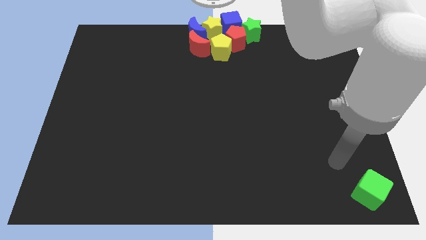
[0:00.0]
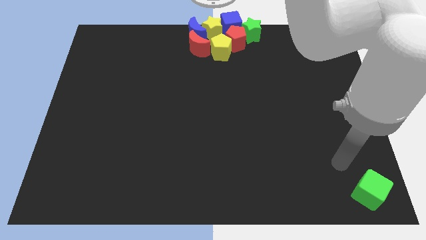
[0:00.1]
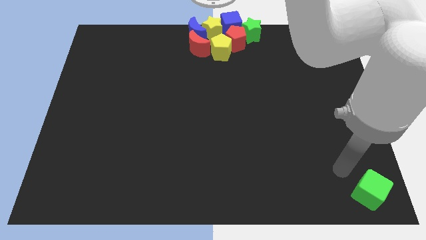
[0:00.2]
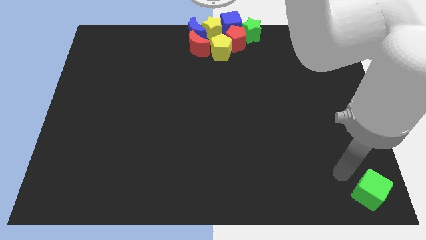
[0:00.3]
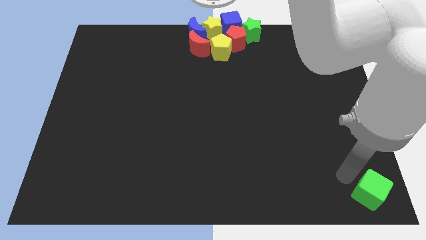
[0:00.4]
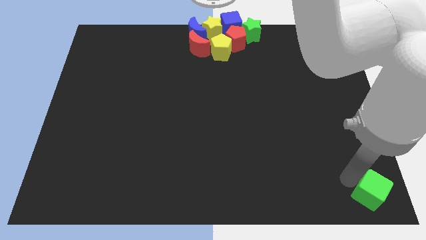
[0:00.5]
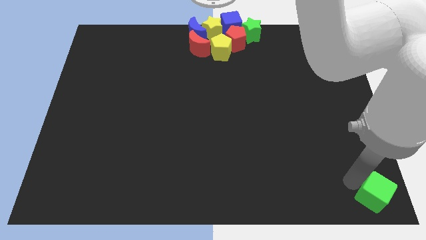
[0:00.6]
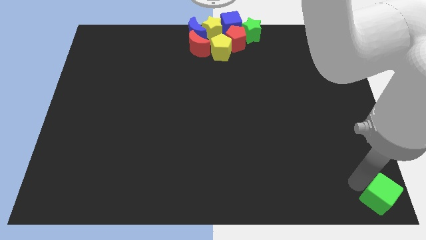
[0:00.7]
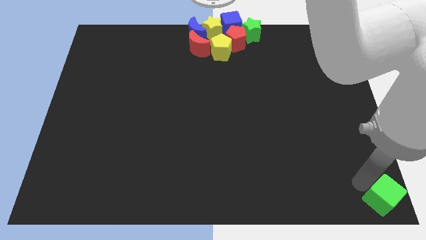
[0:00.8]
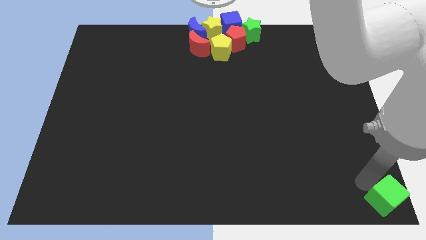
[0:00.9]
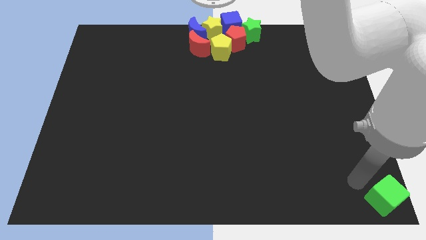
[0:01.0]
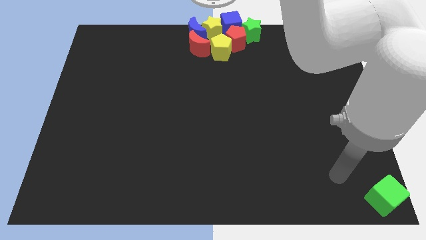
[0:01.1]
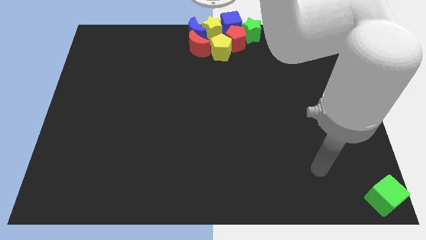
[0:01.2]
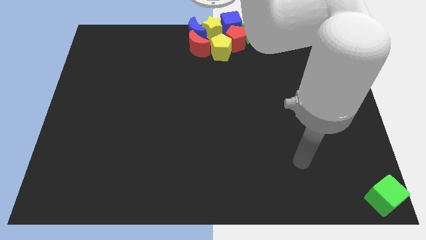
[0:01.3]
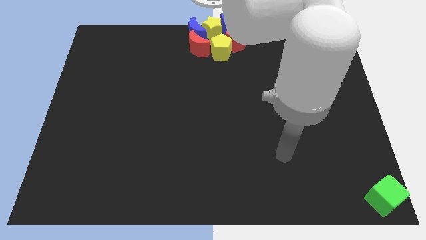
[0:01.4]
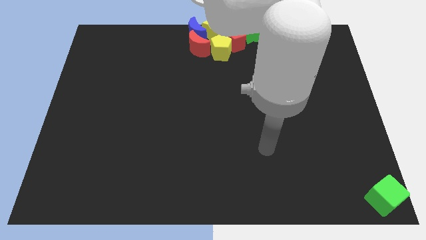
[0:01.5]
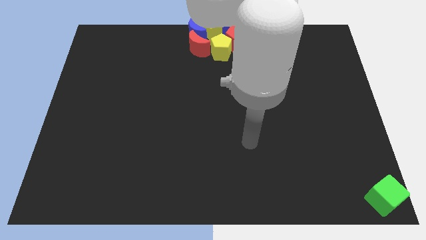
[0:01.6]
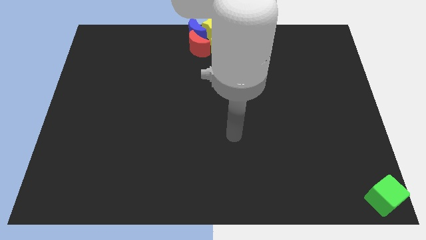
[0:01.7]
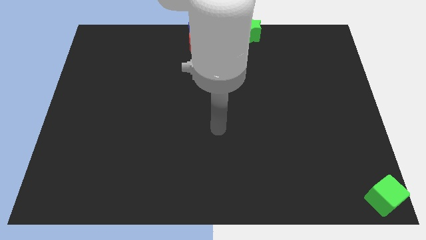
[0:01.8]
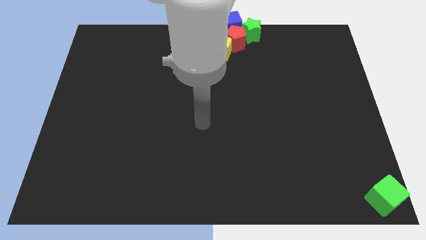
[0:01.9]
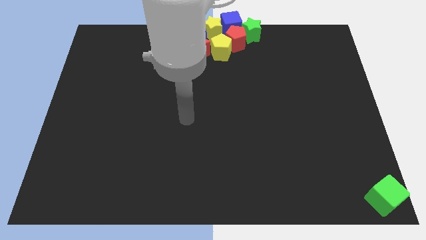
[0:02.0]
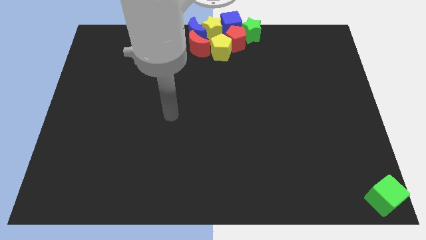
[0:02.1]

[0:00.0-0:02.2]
move the green cube towards the bottom right corner of the board

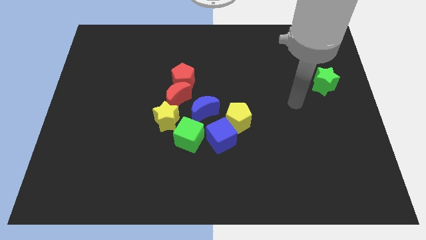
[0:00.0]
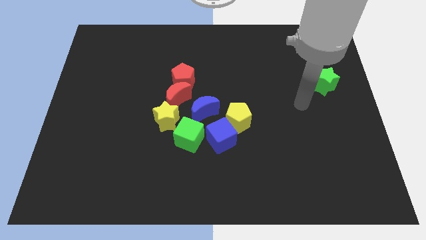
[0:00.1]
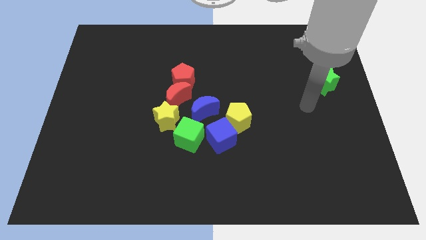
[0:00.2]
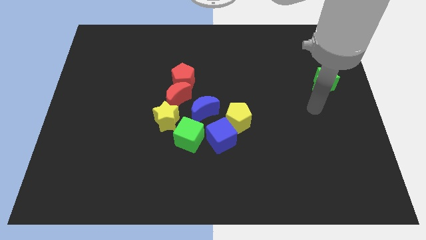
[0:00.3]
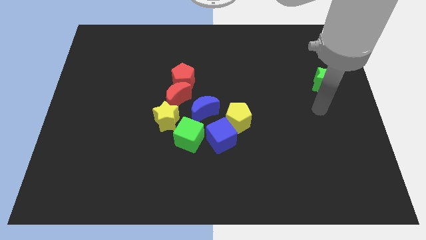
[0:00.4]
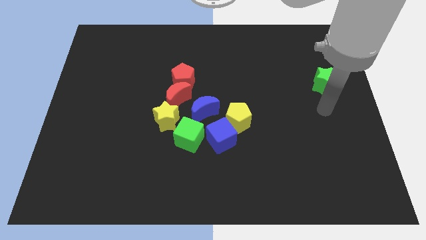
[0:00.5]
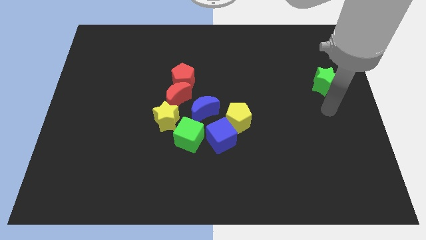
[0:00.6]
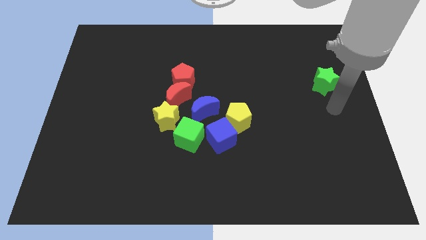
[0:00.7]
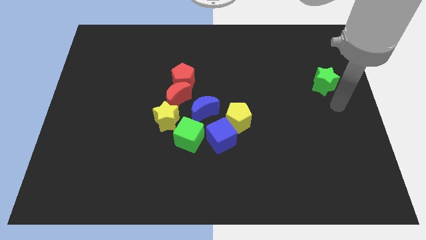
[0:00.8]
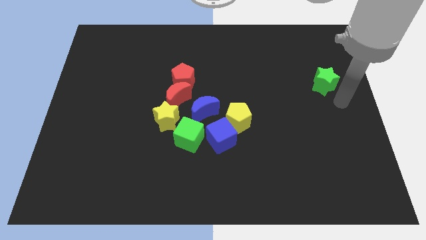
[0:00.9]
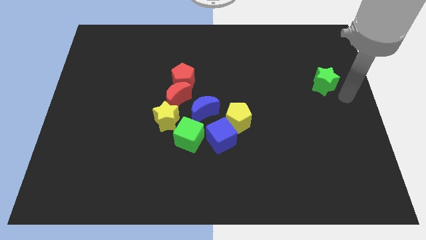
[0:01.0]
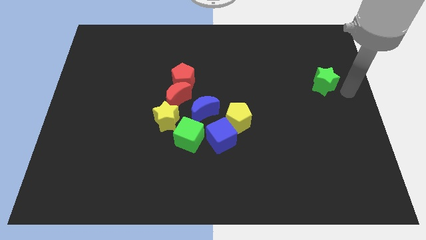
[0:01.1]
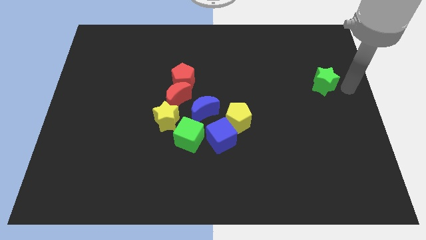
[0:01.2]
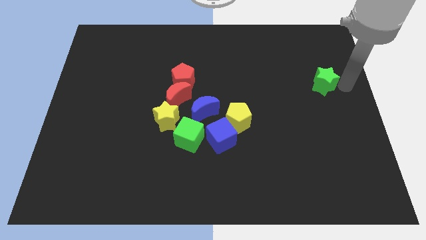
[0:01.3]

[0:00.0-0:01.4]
place your arm to the right of green star

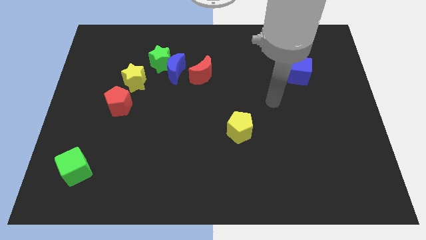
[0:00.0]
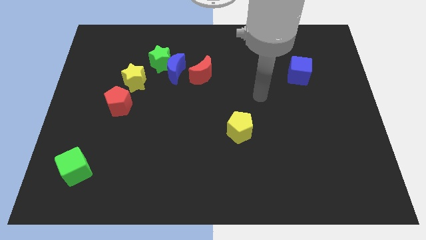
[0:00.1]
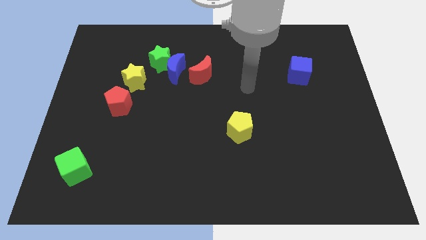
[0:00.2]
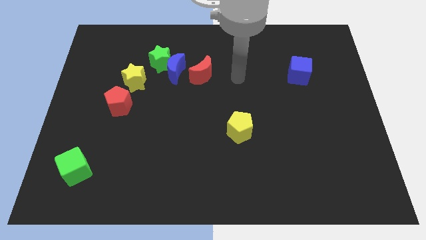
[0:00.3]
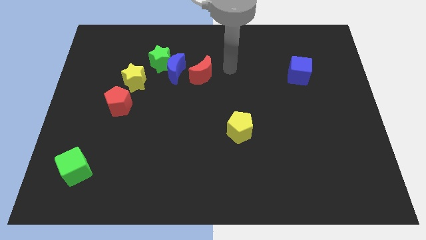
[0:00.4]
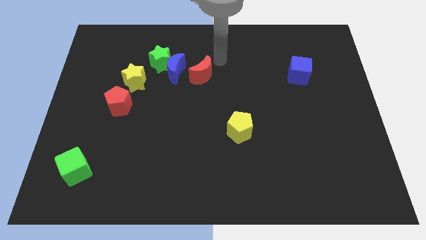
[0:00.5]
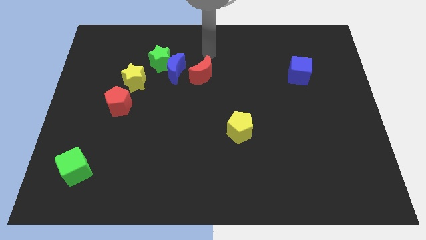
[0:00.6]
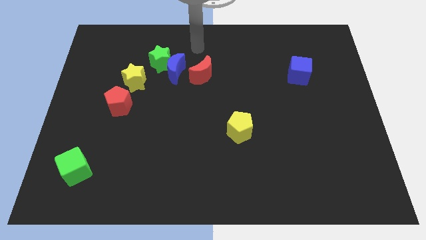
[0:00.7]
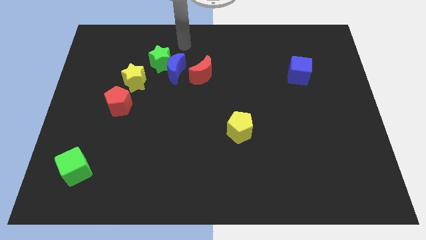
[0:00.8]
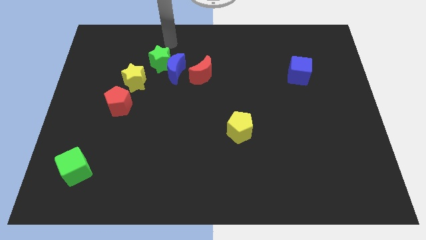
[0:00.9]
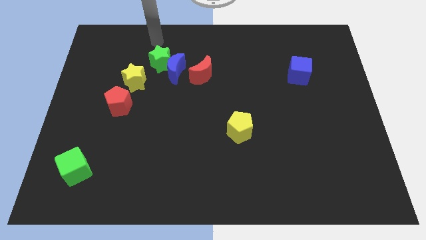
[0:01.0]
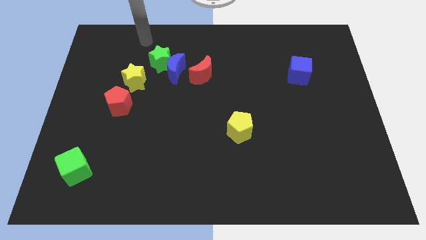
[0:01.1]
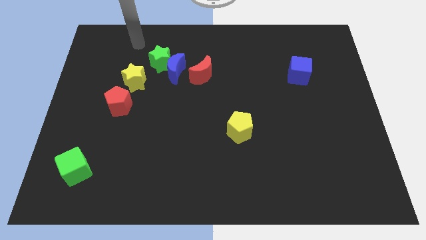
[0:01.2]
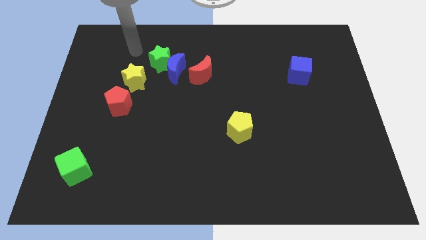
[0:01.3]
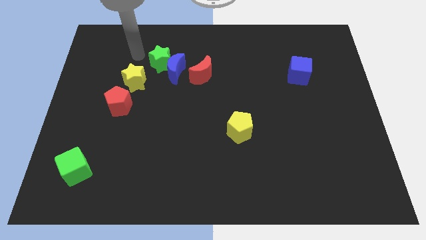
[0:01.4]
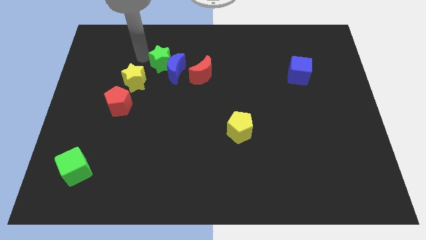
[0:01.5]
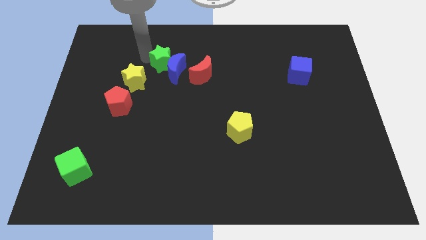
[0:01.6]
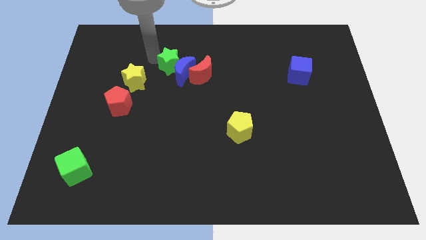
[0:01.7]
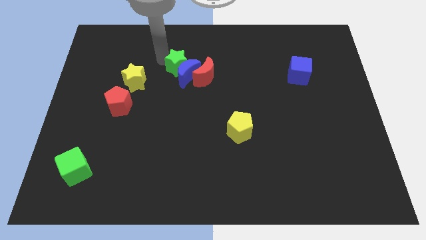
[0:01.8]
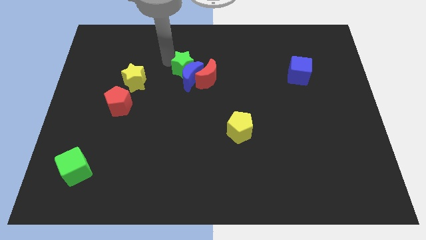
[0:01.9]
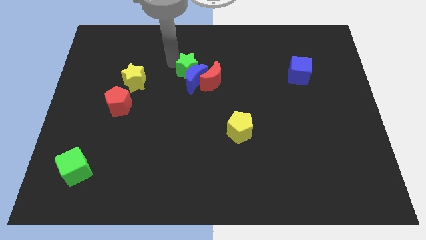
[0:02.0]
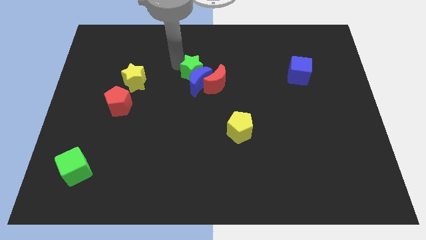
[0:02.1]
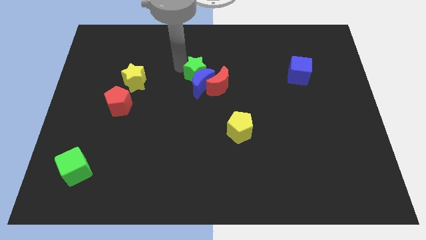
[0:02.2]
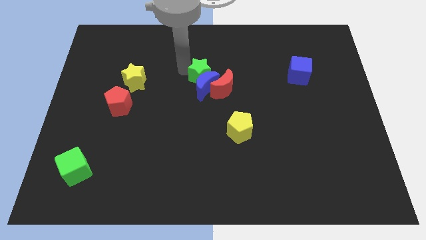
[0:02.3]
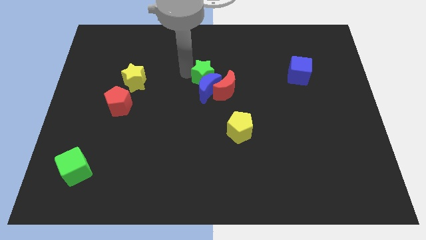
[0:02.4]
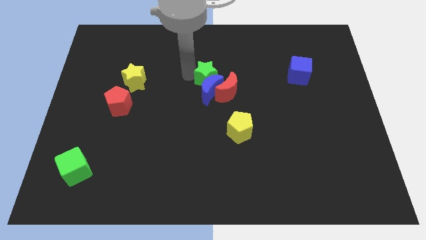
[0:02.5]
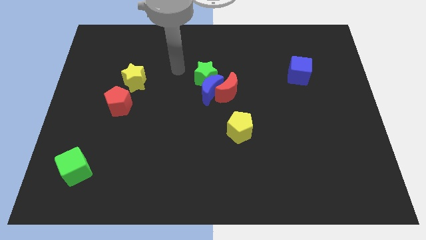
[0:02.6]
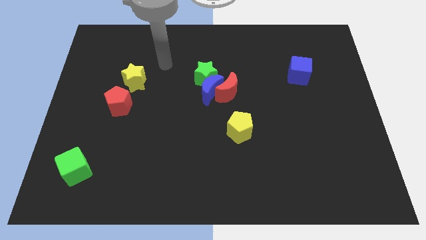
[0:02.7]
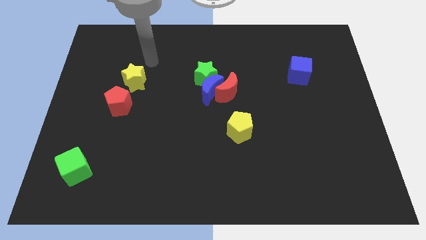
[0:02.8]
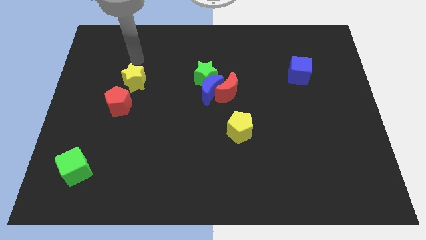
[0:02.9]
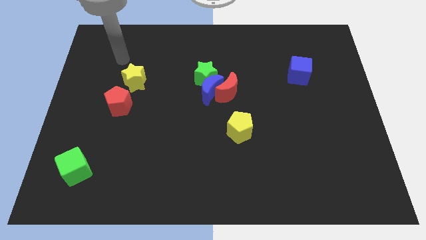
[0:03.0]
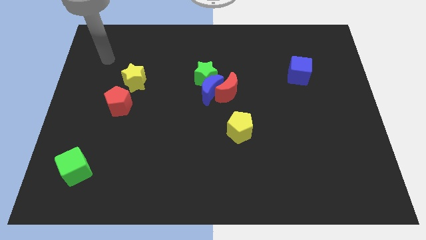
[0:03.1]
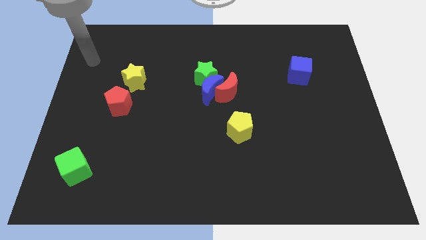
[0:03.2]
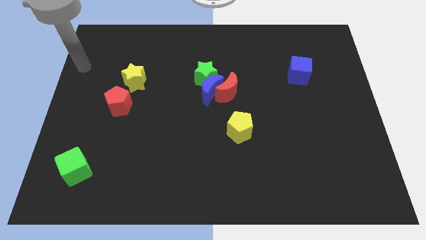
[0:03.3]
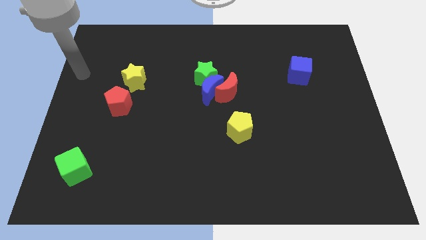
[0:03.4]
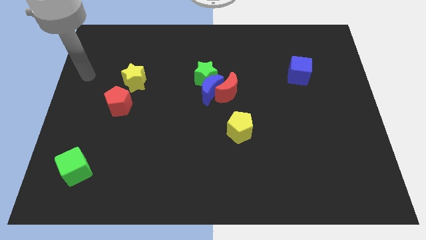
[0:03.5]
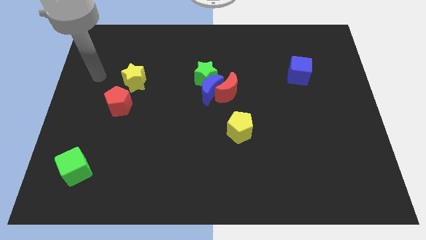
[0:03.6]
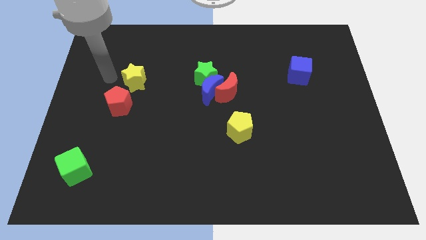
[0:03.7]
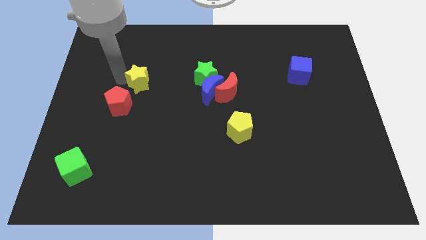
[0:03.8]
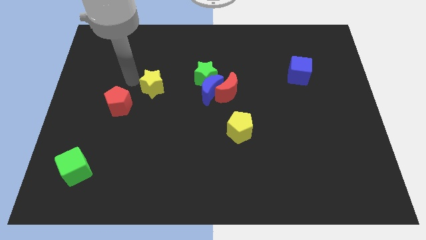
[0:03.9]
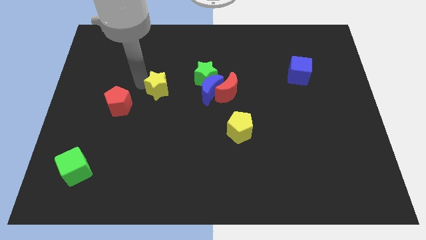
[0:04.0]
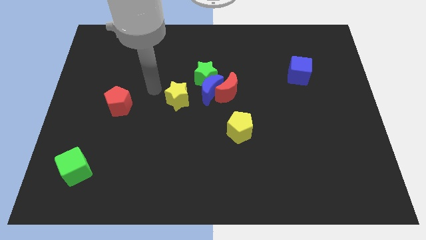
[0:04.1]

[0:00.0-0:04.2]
push the yellow star diagonally to the bottom left of the green star

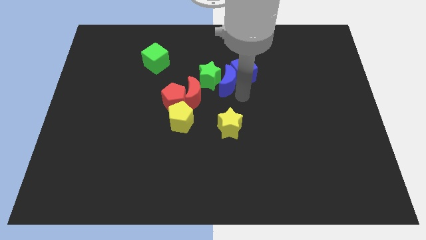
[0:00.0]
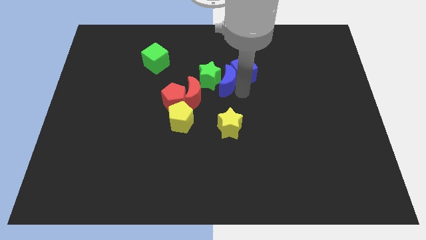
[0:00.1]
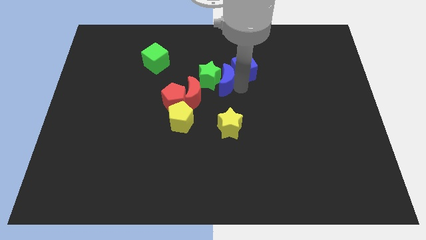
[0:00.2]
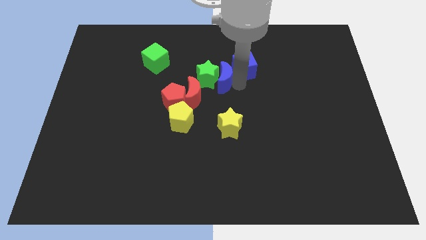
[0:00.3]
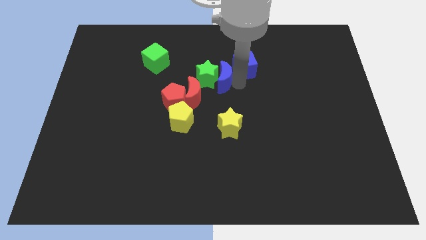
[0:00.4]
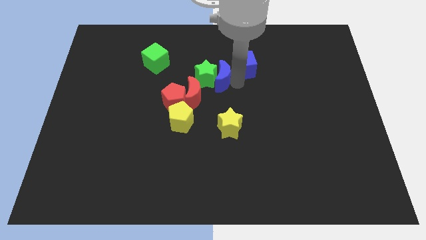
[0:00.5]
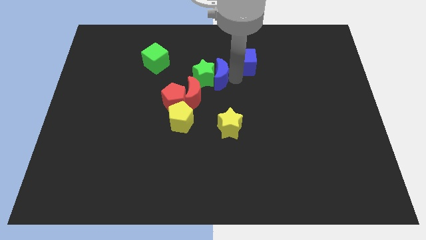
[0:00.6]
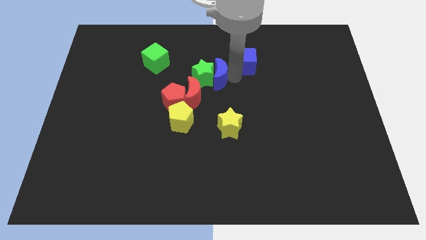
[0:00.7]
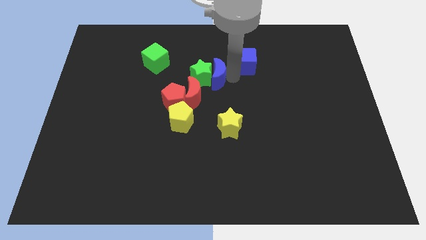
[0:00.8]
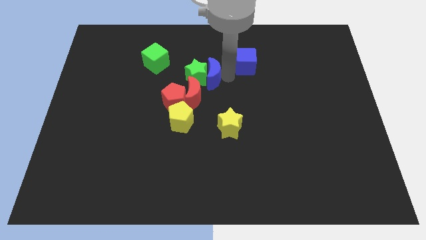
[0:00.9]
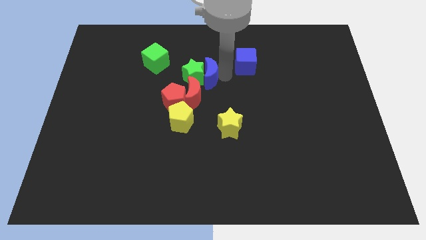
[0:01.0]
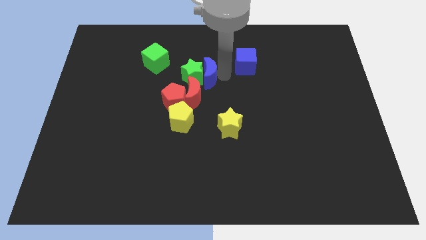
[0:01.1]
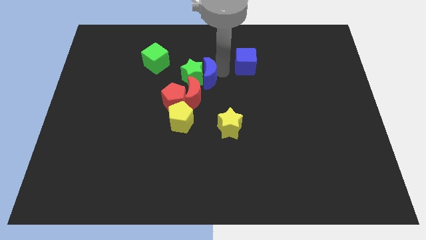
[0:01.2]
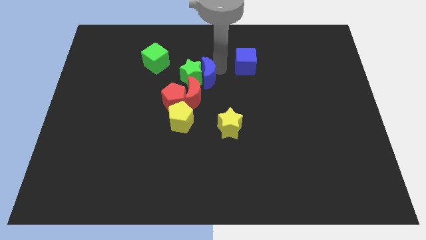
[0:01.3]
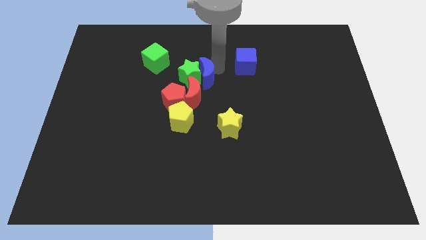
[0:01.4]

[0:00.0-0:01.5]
separate the blue blocks
